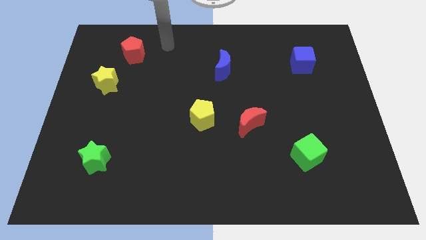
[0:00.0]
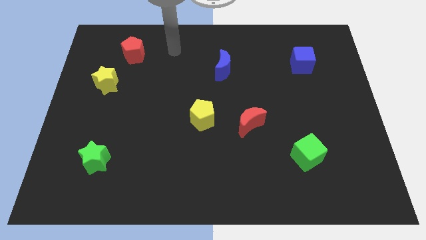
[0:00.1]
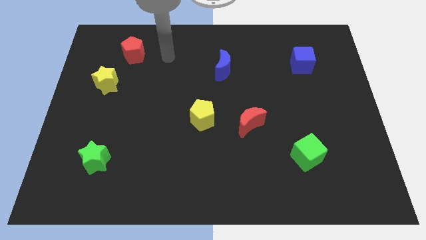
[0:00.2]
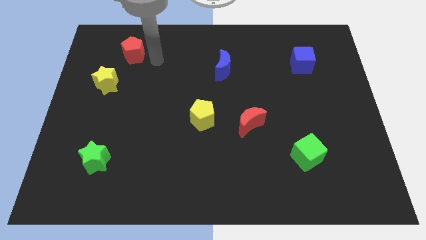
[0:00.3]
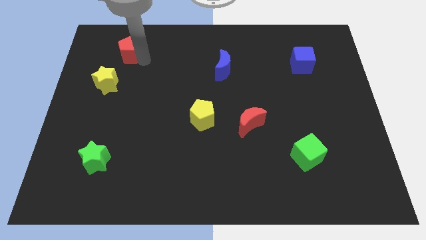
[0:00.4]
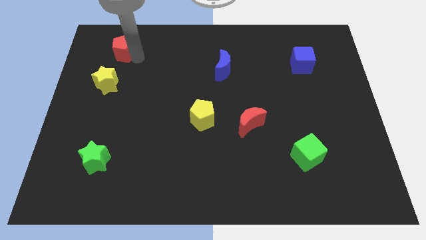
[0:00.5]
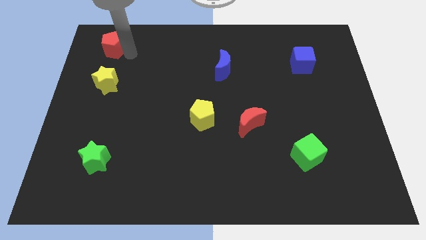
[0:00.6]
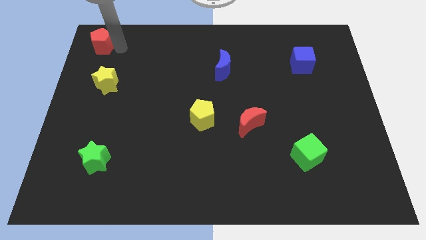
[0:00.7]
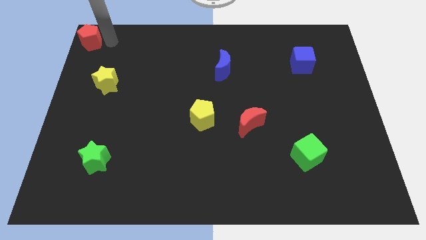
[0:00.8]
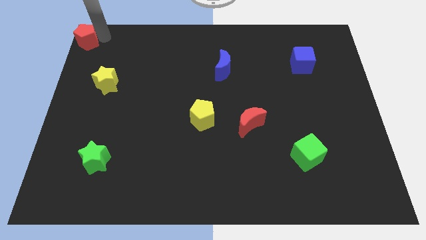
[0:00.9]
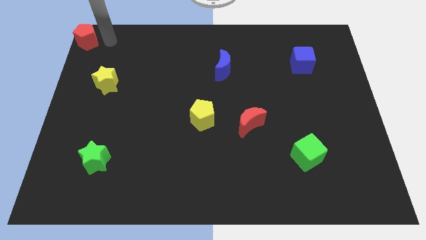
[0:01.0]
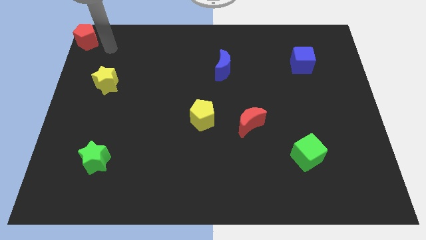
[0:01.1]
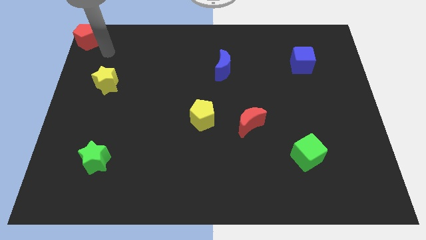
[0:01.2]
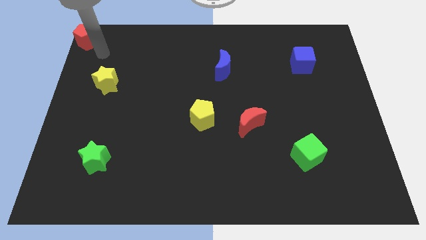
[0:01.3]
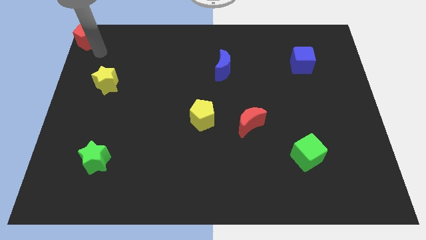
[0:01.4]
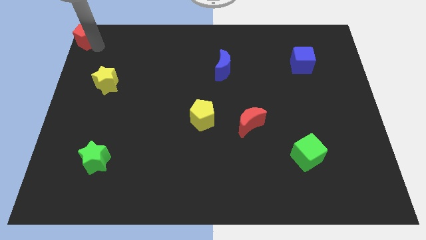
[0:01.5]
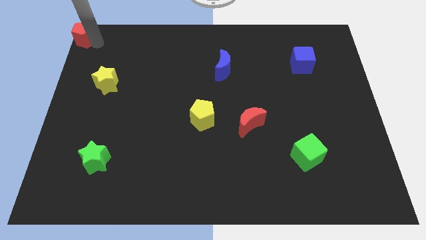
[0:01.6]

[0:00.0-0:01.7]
move the red pentagon to the top left corner

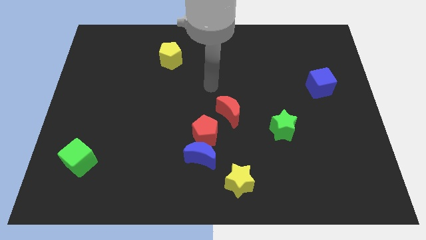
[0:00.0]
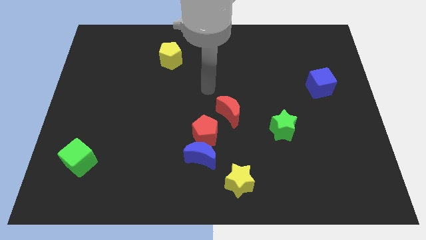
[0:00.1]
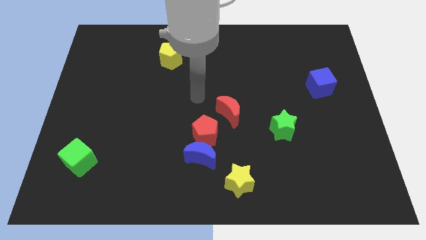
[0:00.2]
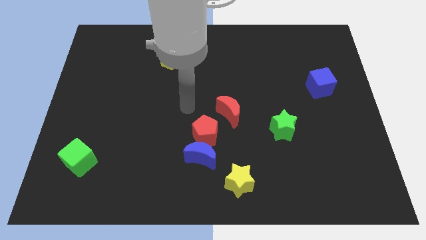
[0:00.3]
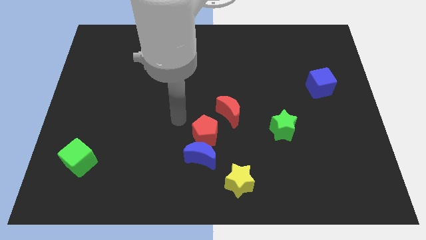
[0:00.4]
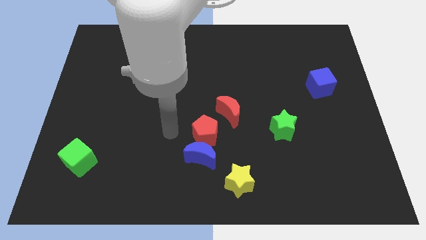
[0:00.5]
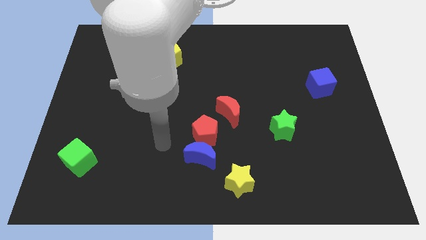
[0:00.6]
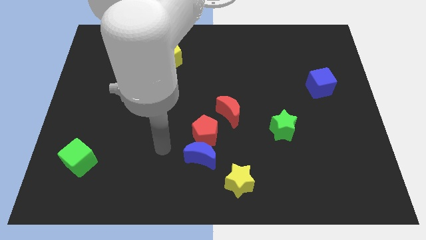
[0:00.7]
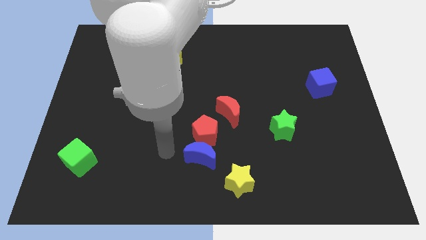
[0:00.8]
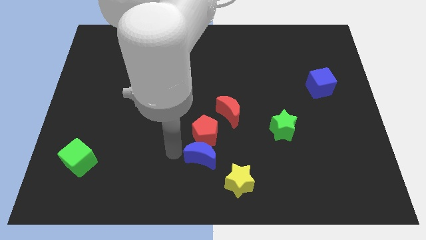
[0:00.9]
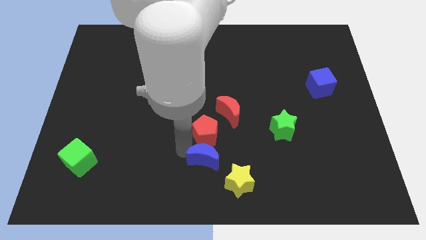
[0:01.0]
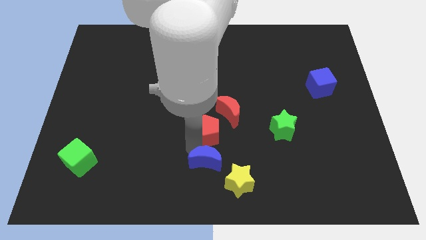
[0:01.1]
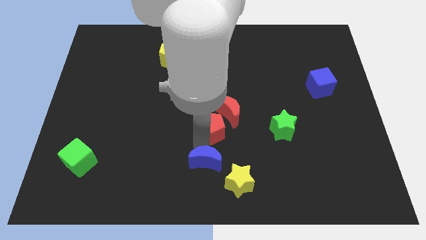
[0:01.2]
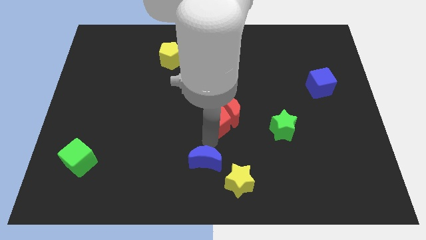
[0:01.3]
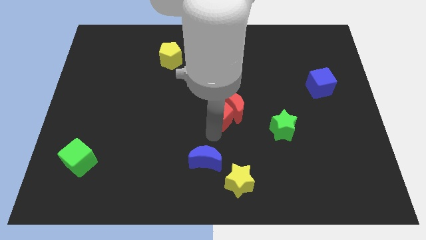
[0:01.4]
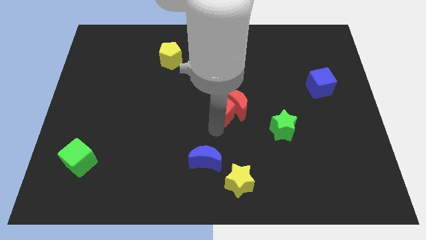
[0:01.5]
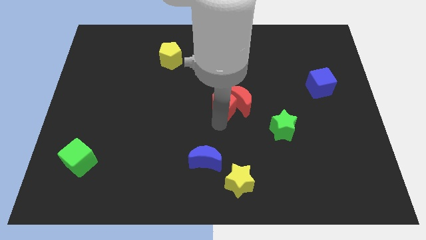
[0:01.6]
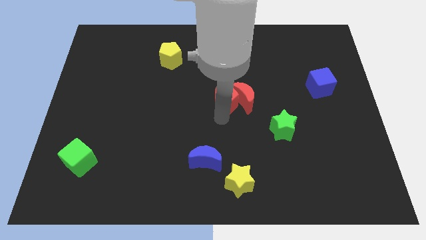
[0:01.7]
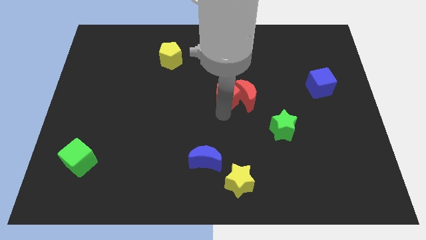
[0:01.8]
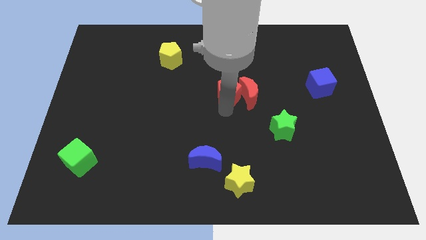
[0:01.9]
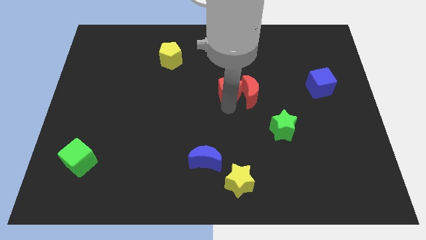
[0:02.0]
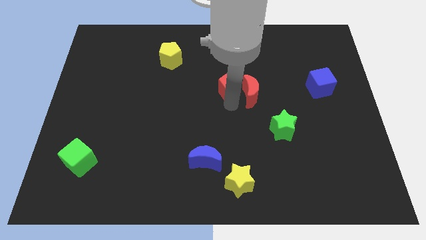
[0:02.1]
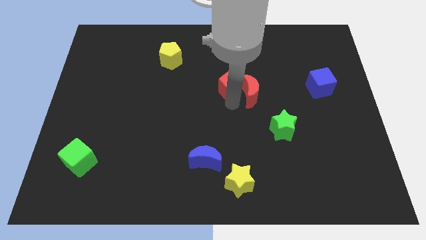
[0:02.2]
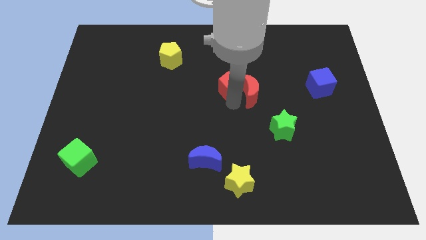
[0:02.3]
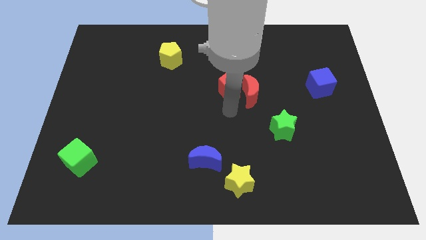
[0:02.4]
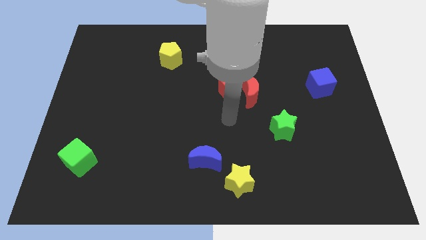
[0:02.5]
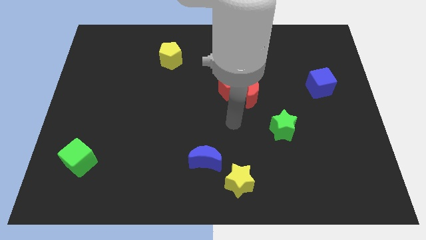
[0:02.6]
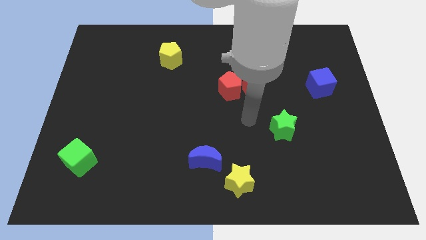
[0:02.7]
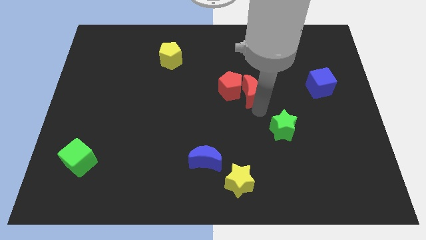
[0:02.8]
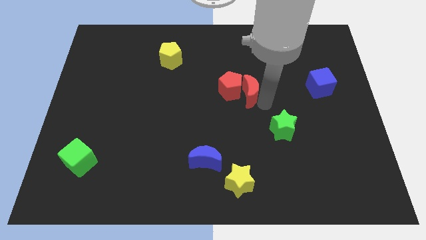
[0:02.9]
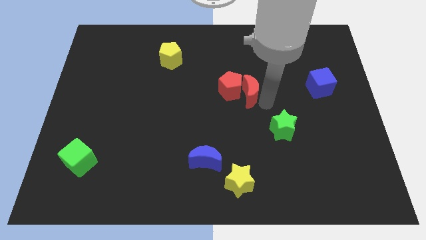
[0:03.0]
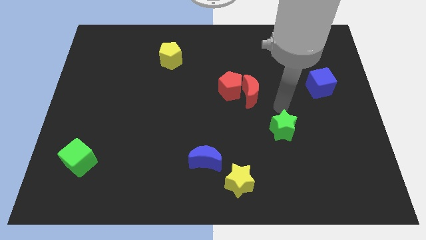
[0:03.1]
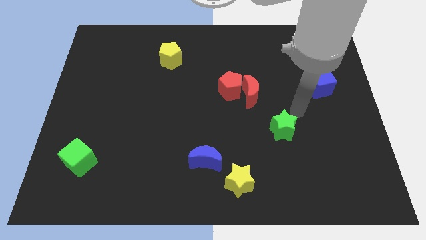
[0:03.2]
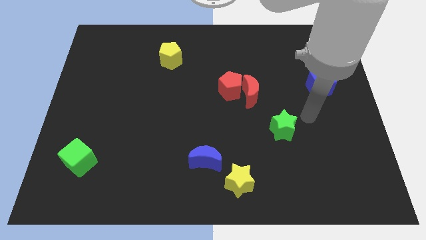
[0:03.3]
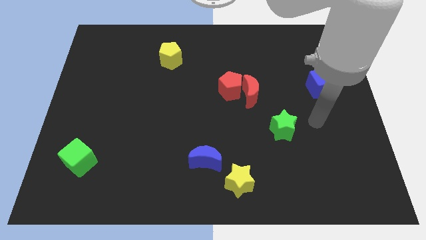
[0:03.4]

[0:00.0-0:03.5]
move the red pentagon slightly upwards

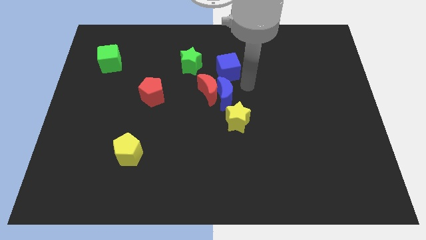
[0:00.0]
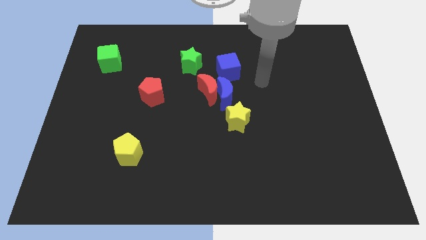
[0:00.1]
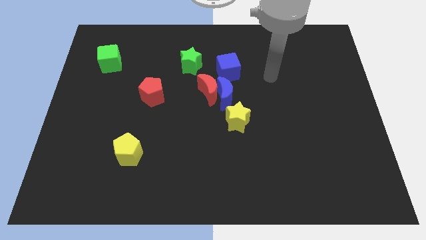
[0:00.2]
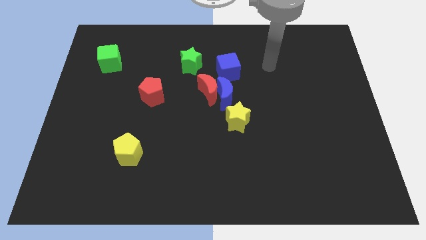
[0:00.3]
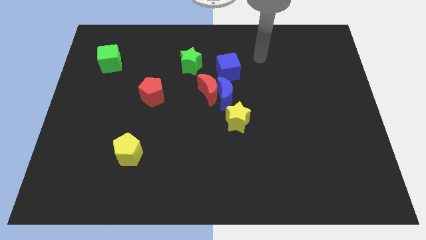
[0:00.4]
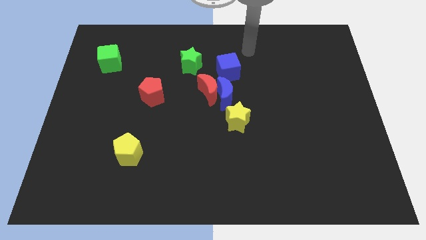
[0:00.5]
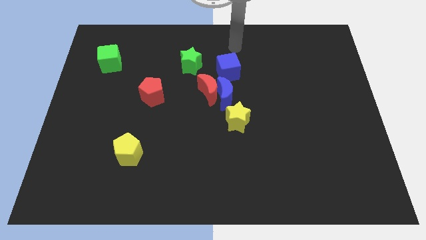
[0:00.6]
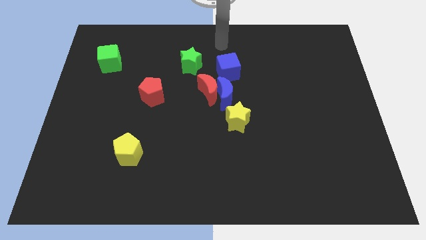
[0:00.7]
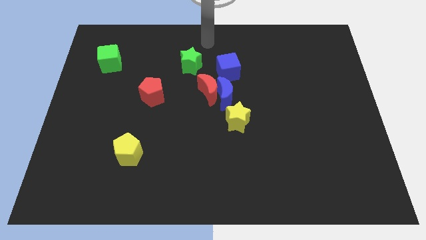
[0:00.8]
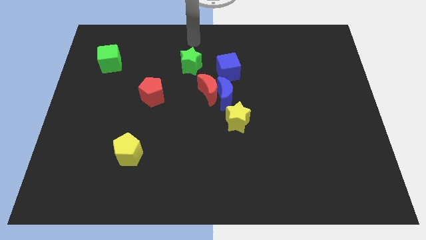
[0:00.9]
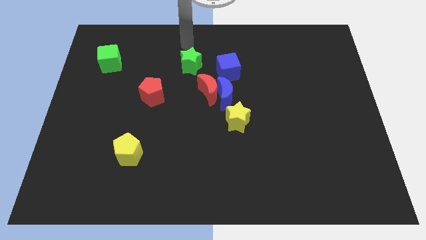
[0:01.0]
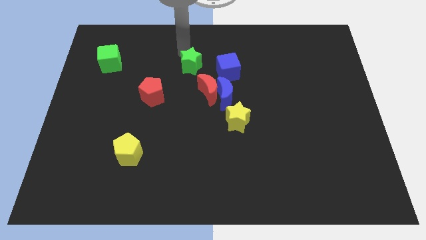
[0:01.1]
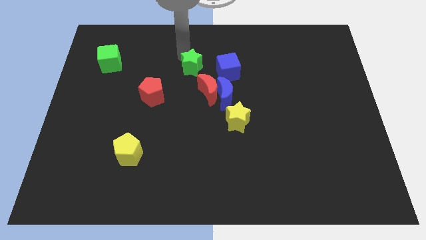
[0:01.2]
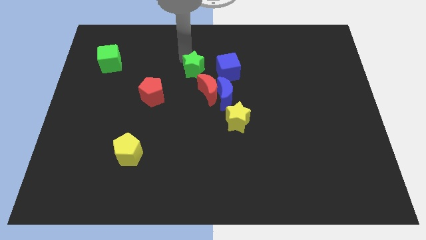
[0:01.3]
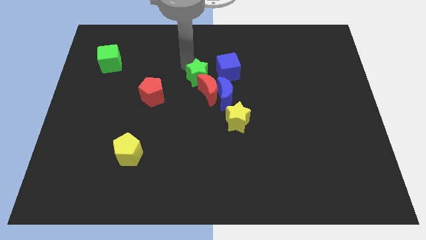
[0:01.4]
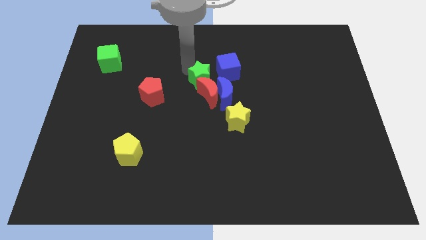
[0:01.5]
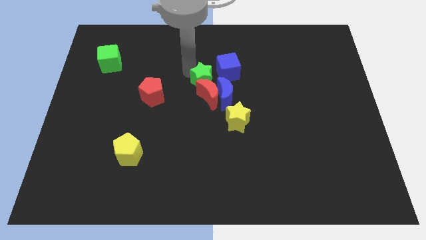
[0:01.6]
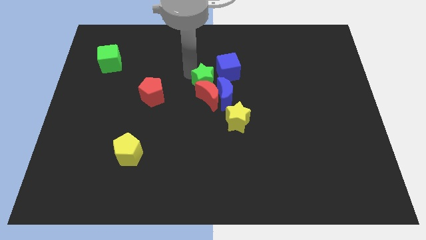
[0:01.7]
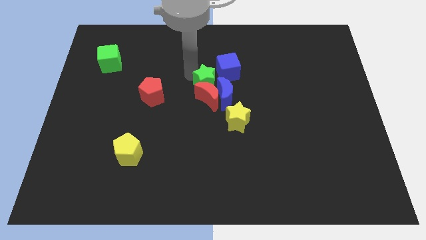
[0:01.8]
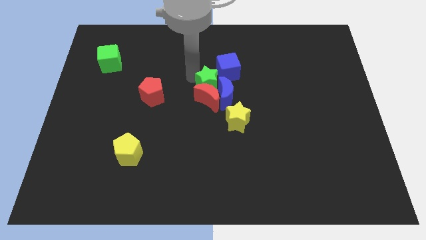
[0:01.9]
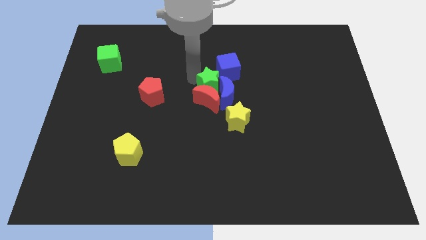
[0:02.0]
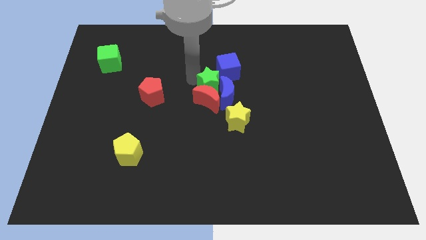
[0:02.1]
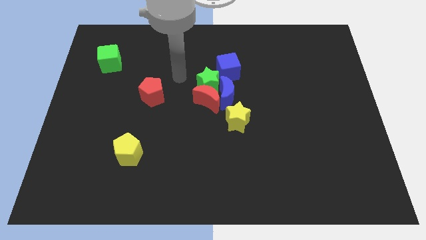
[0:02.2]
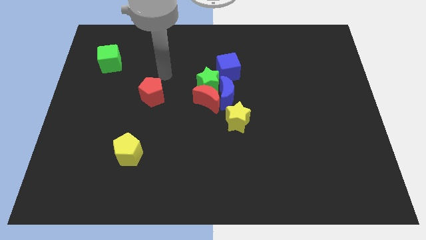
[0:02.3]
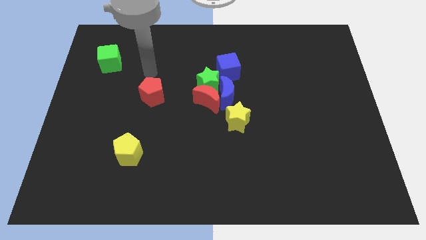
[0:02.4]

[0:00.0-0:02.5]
move the green star to the left of the blue crescent

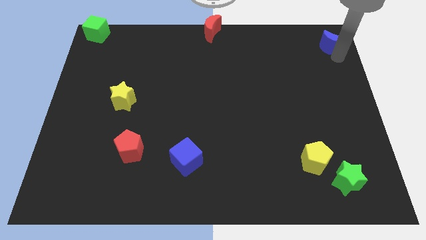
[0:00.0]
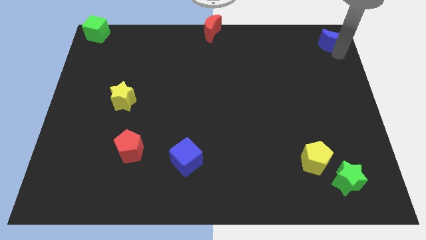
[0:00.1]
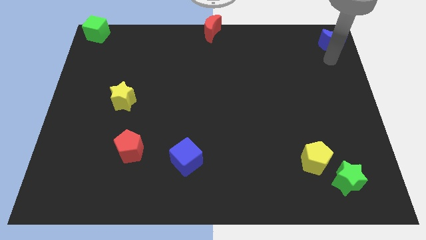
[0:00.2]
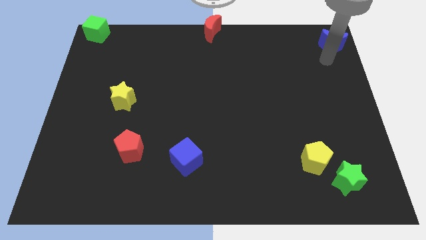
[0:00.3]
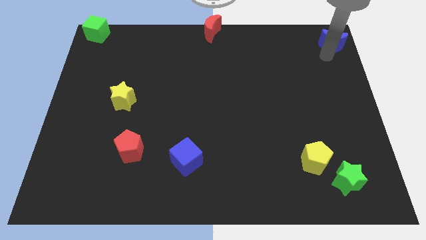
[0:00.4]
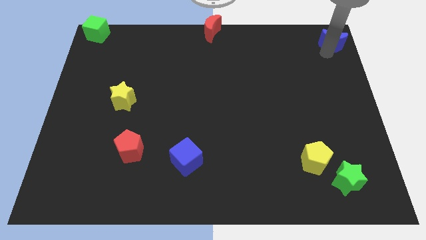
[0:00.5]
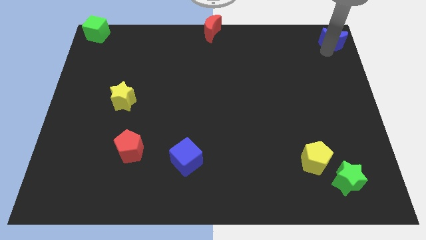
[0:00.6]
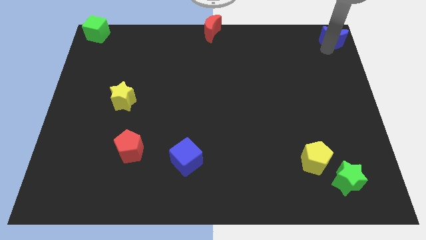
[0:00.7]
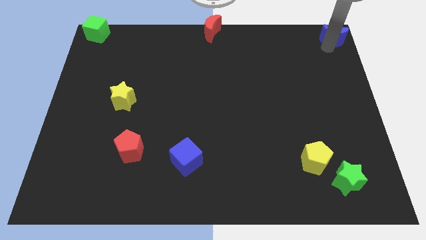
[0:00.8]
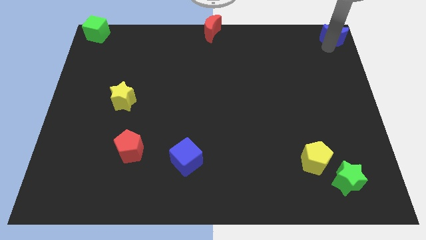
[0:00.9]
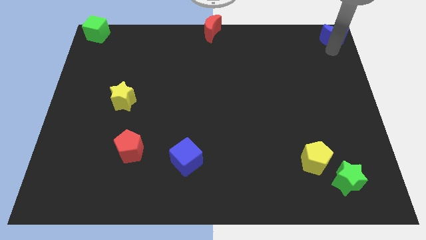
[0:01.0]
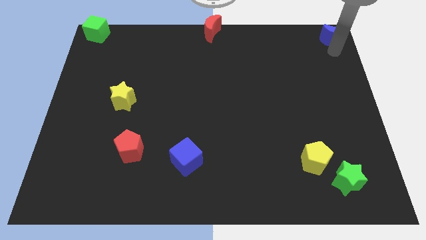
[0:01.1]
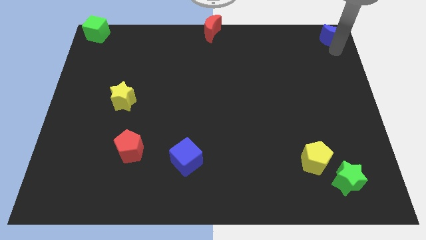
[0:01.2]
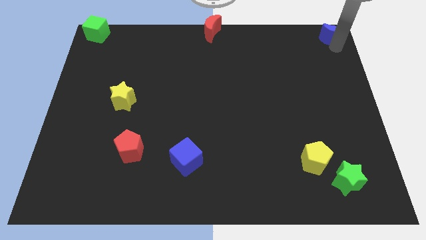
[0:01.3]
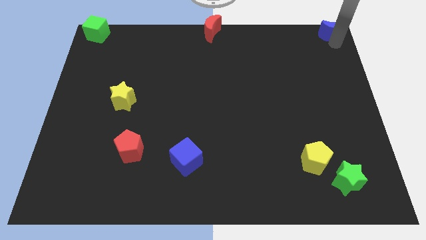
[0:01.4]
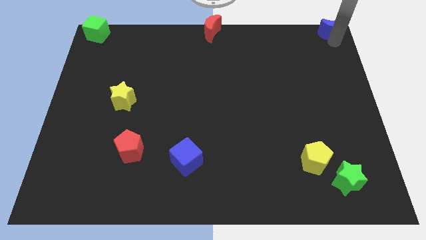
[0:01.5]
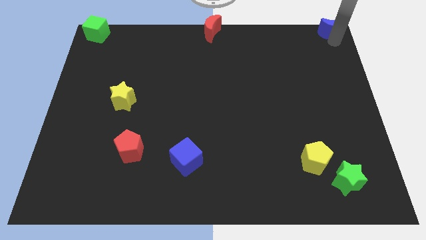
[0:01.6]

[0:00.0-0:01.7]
slide the blue moon to the top right corner of the board
